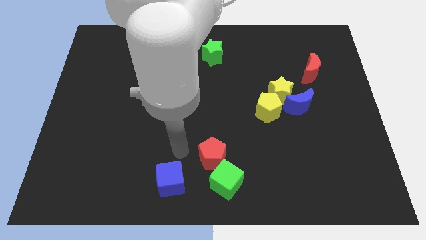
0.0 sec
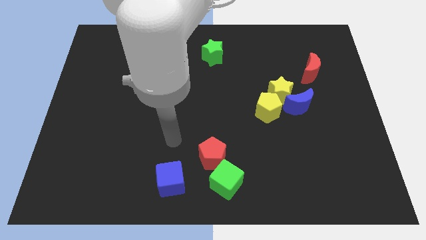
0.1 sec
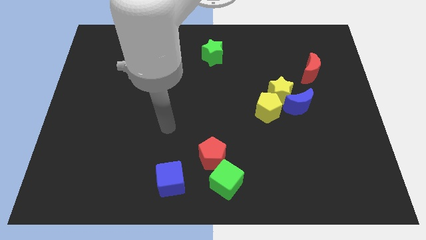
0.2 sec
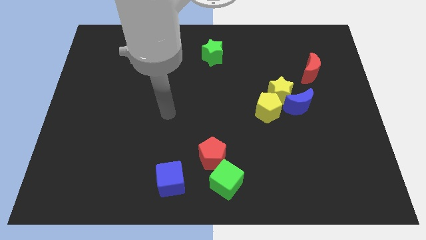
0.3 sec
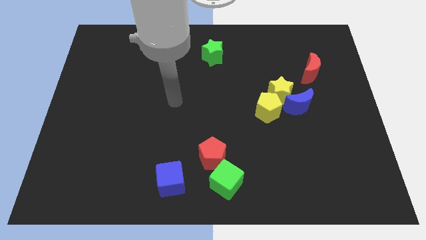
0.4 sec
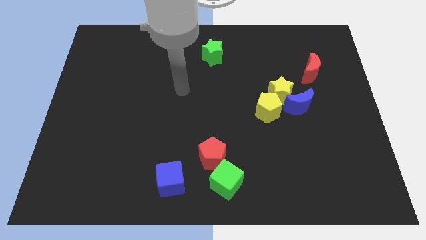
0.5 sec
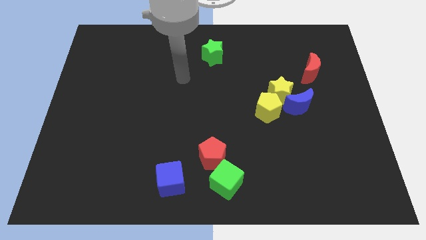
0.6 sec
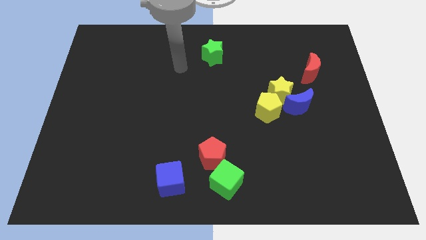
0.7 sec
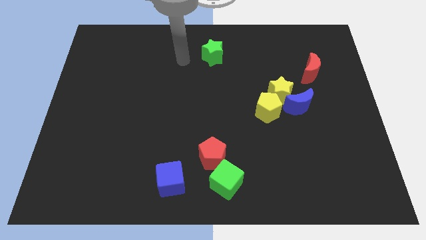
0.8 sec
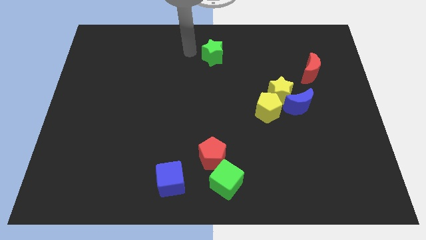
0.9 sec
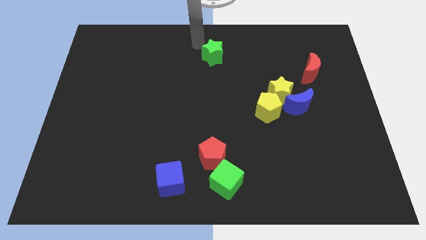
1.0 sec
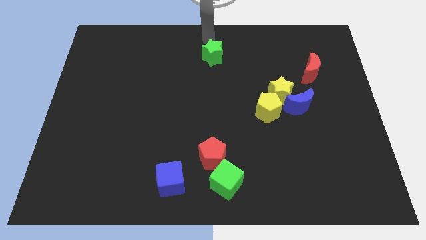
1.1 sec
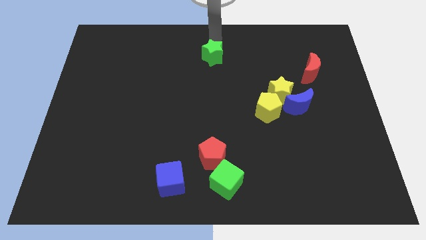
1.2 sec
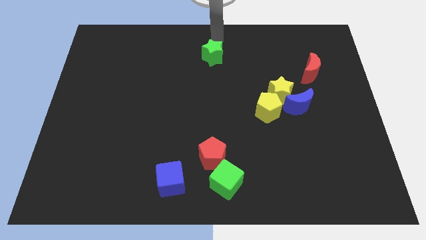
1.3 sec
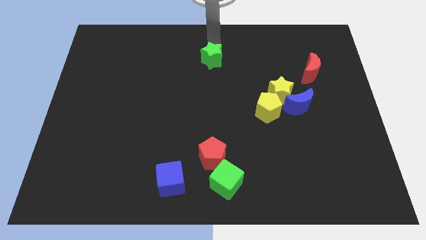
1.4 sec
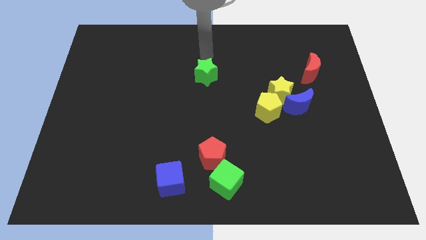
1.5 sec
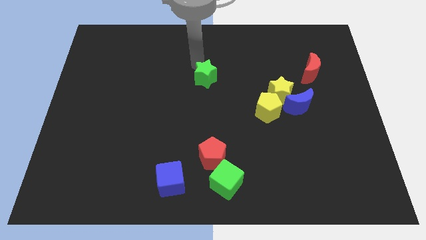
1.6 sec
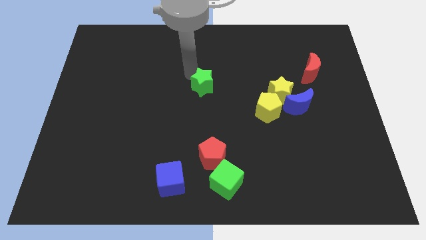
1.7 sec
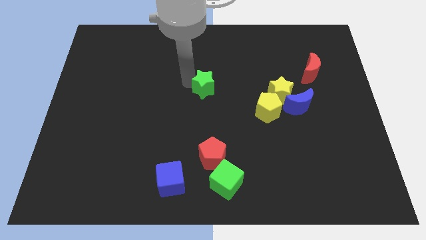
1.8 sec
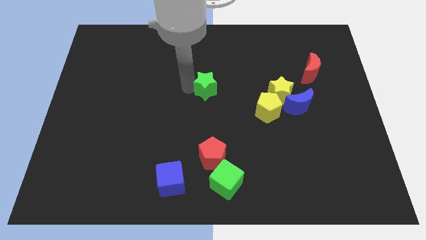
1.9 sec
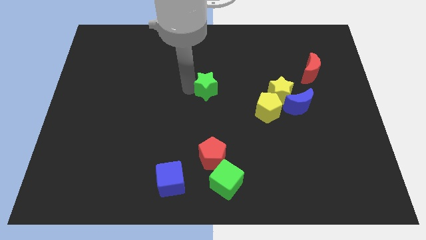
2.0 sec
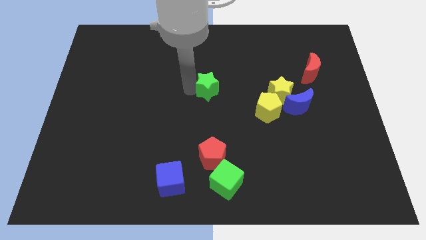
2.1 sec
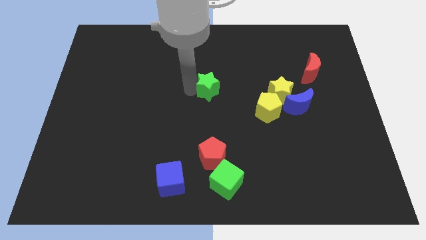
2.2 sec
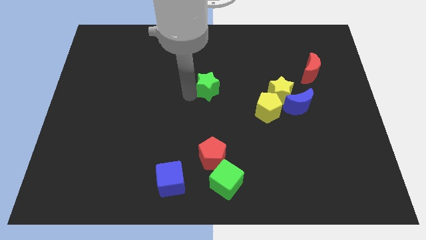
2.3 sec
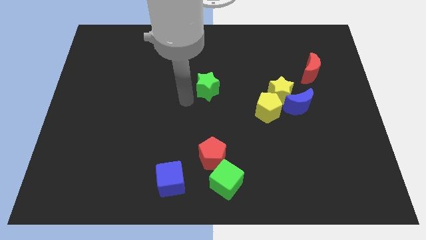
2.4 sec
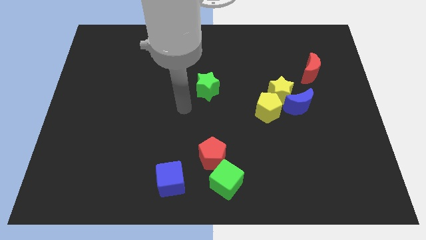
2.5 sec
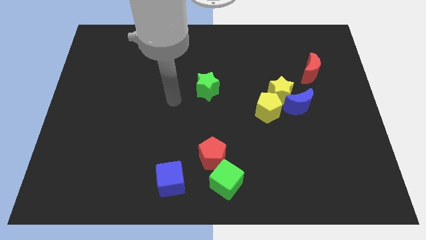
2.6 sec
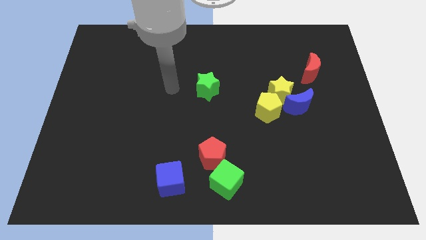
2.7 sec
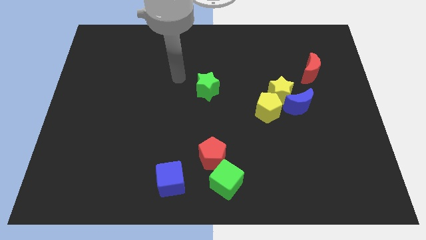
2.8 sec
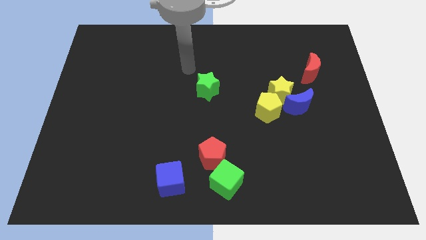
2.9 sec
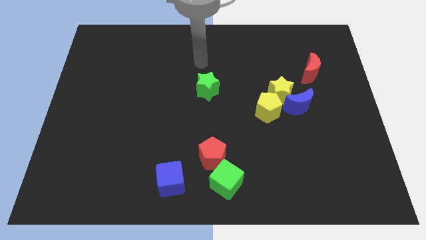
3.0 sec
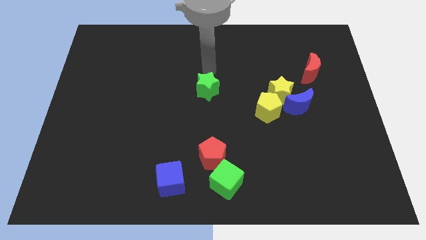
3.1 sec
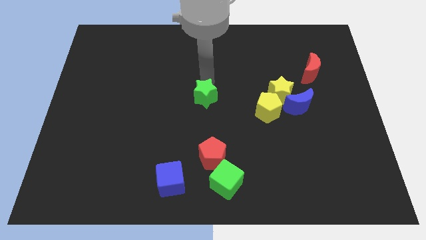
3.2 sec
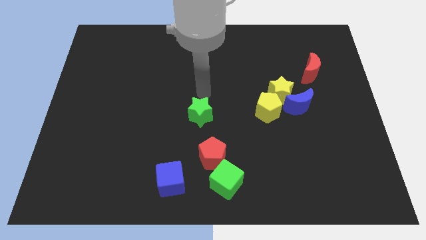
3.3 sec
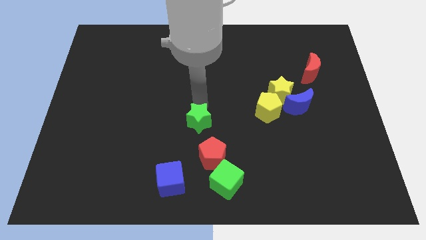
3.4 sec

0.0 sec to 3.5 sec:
slide green star towards red pentagon

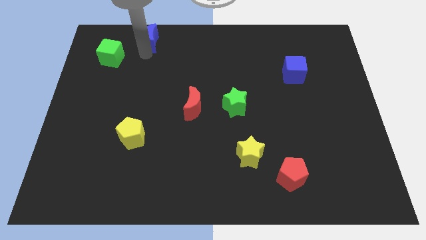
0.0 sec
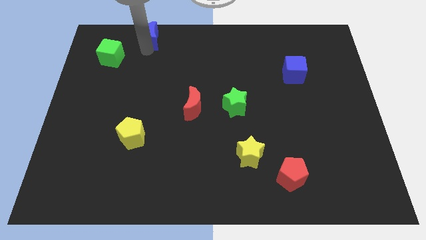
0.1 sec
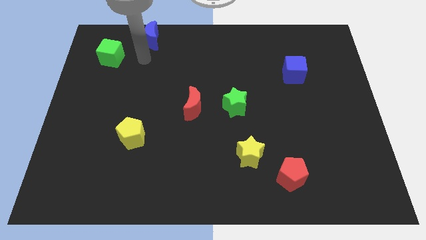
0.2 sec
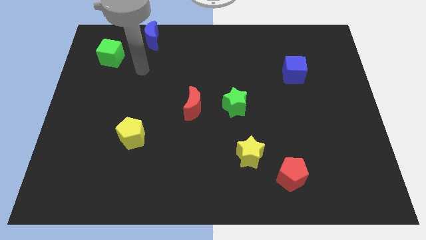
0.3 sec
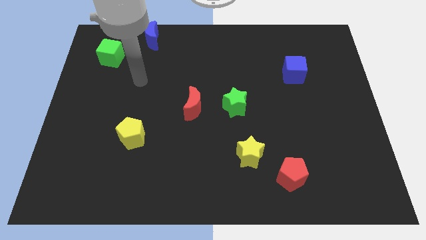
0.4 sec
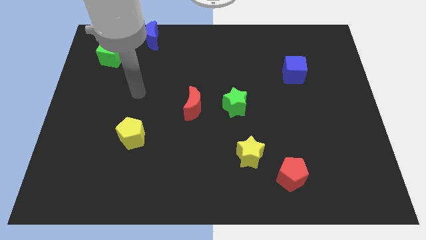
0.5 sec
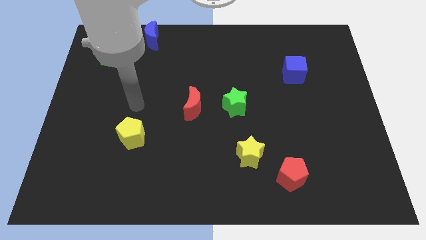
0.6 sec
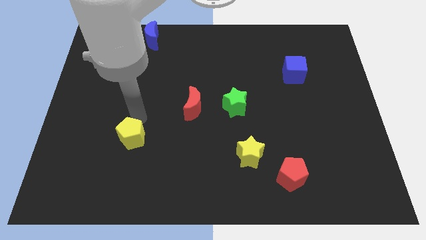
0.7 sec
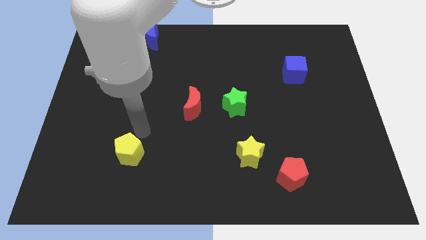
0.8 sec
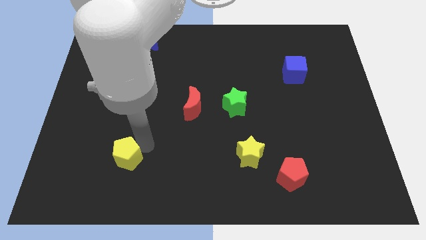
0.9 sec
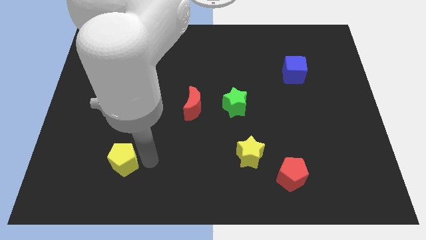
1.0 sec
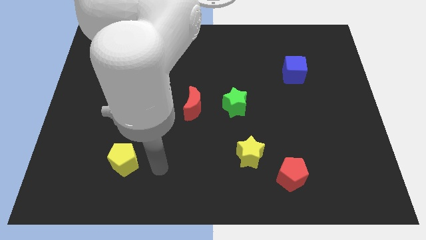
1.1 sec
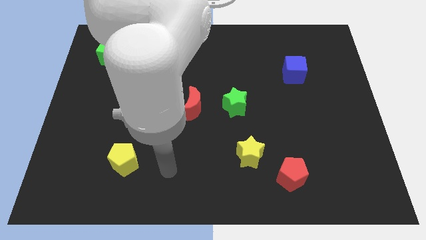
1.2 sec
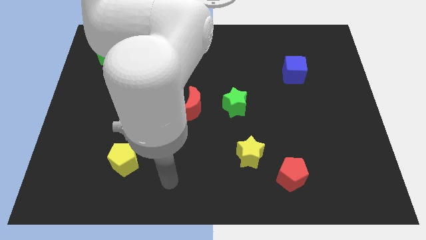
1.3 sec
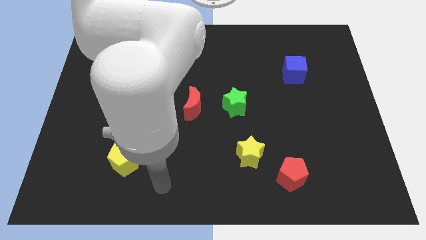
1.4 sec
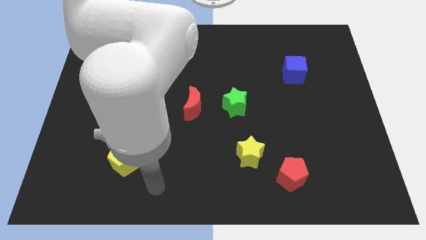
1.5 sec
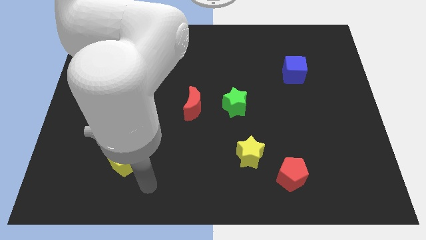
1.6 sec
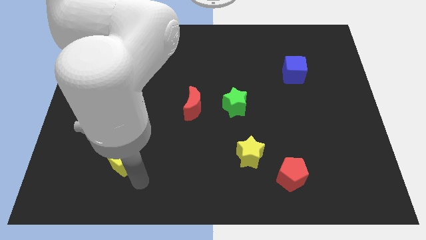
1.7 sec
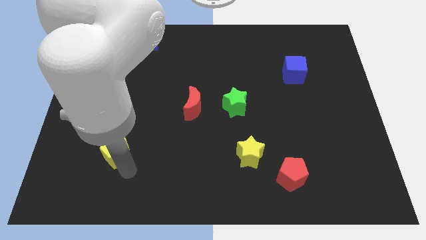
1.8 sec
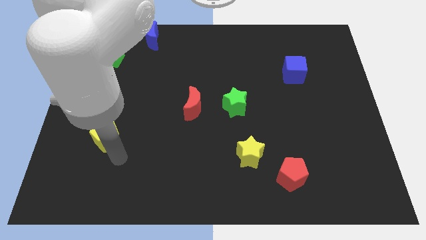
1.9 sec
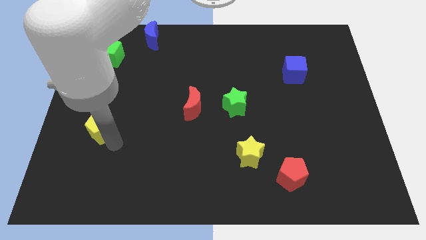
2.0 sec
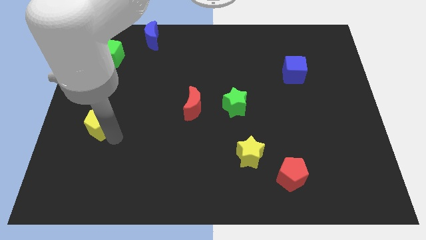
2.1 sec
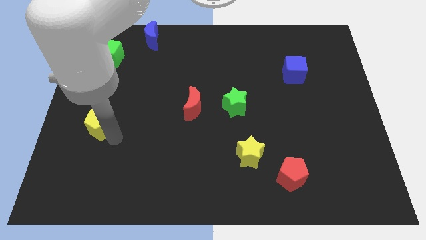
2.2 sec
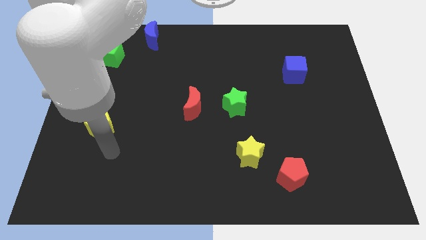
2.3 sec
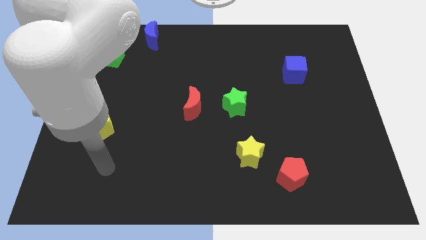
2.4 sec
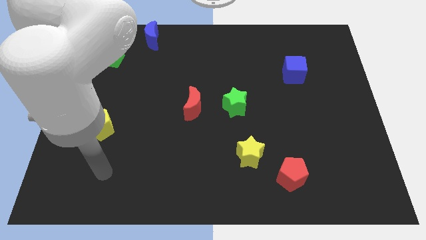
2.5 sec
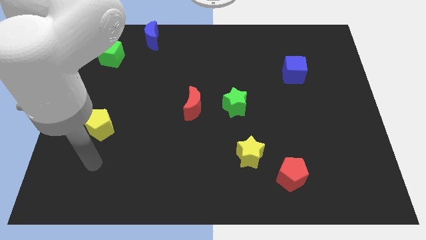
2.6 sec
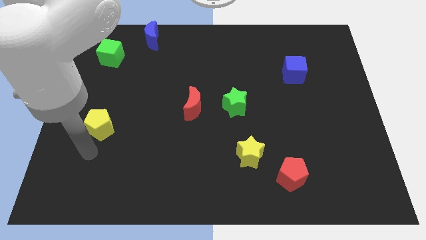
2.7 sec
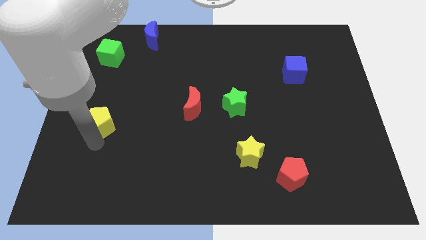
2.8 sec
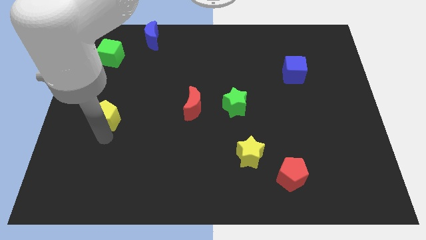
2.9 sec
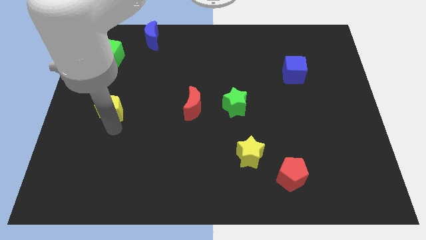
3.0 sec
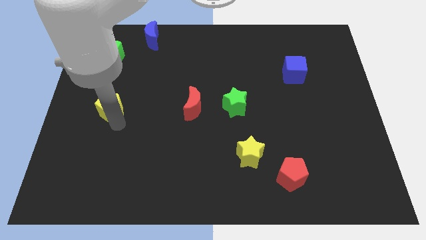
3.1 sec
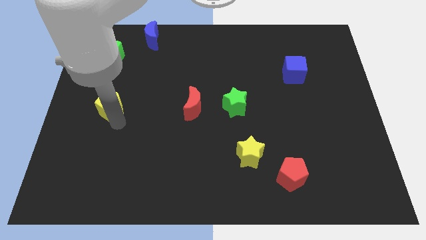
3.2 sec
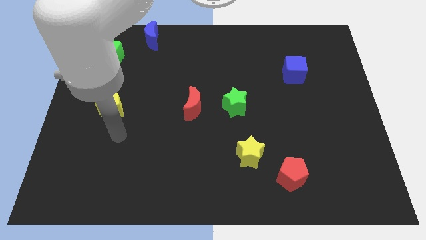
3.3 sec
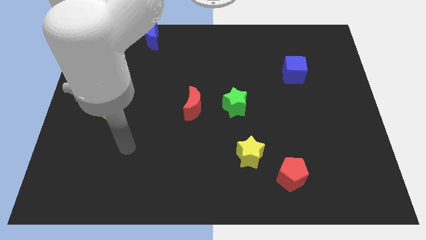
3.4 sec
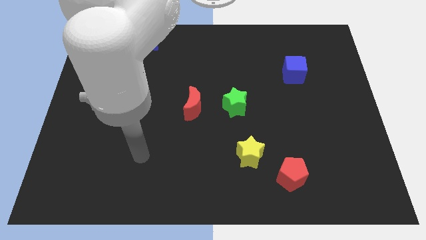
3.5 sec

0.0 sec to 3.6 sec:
push the yellow pentagon left to the red moon

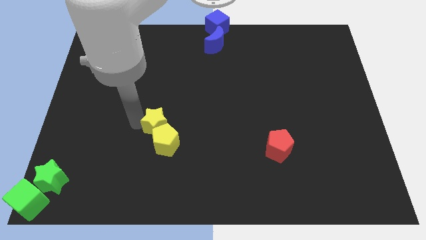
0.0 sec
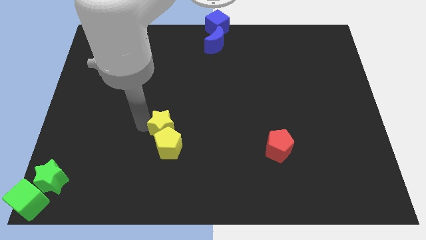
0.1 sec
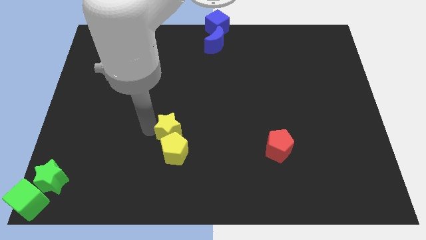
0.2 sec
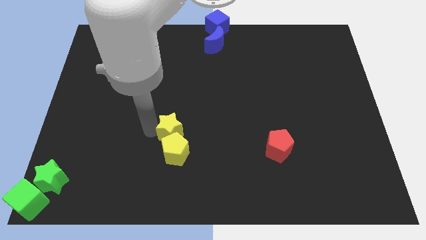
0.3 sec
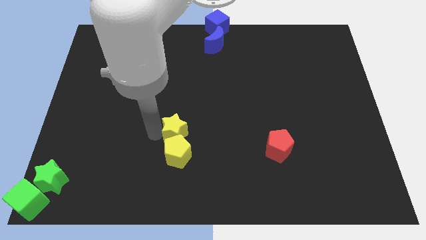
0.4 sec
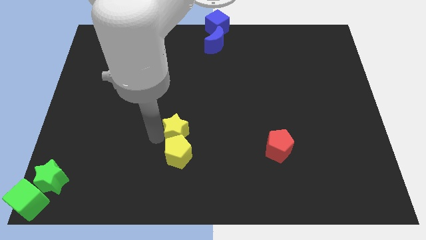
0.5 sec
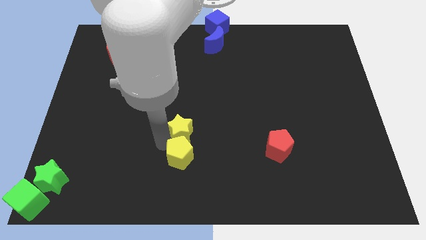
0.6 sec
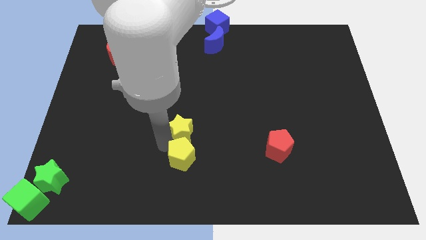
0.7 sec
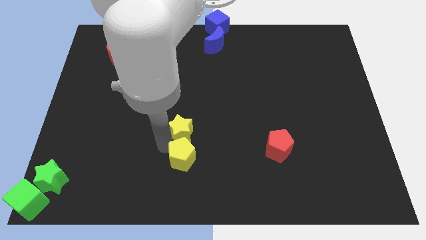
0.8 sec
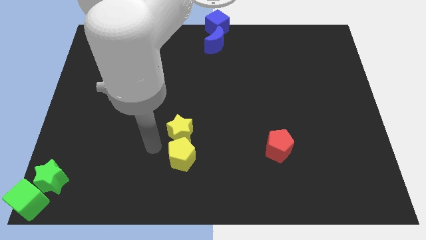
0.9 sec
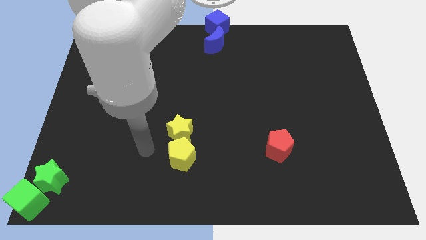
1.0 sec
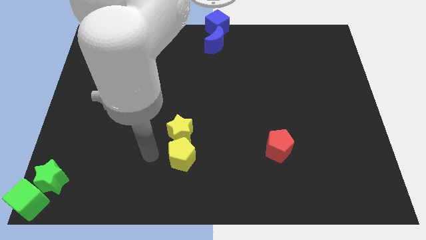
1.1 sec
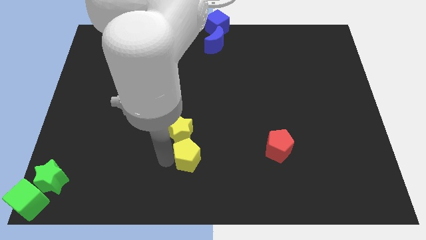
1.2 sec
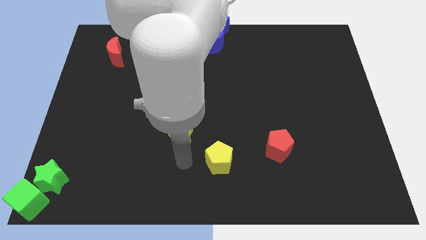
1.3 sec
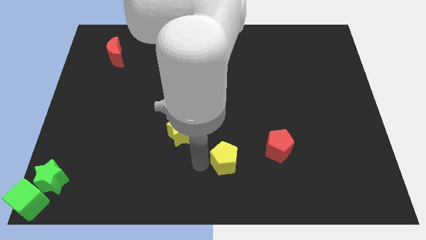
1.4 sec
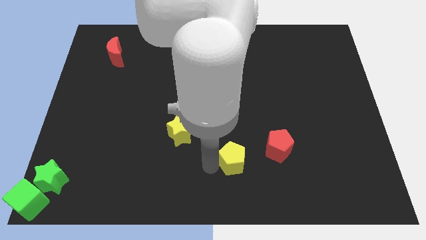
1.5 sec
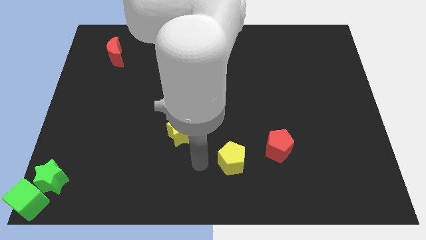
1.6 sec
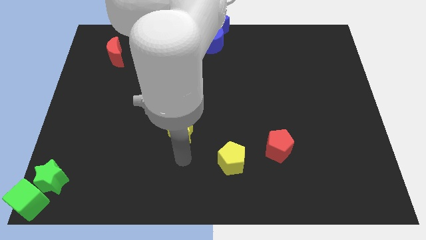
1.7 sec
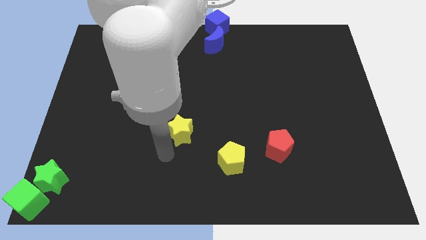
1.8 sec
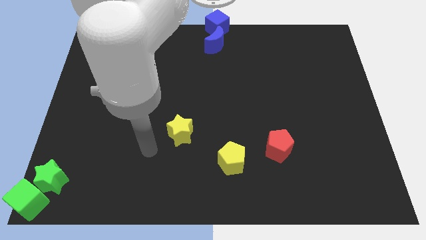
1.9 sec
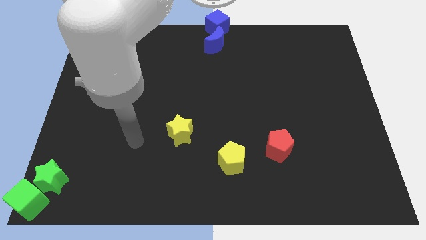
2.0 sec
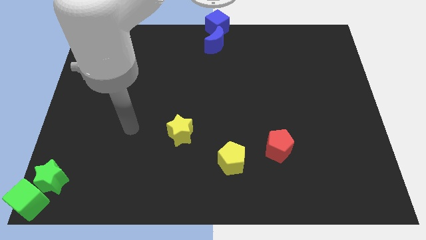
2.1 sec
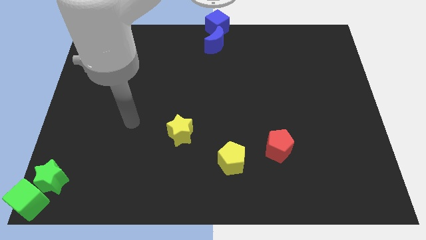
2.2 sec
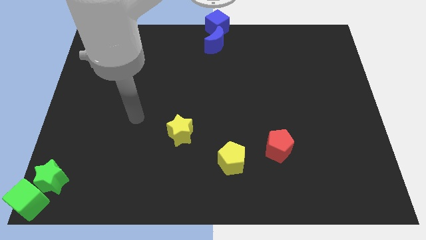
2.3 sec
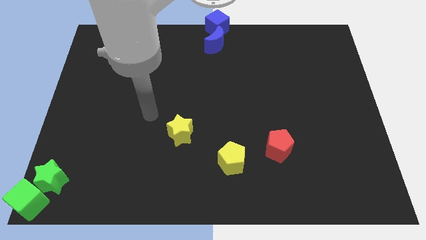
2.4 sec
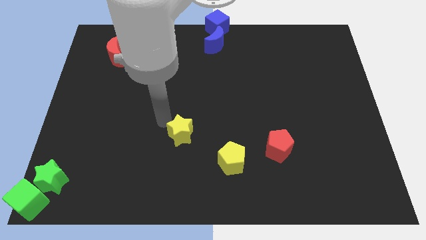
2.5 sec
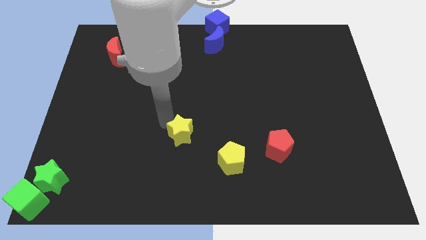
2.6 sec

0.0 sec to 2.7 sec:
separate the yellow star and yellow pentagon
